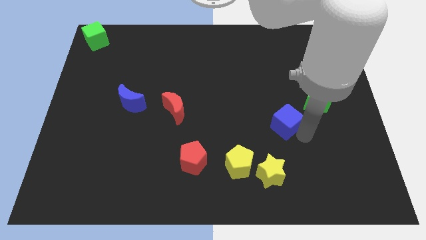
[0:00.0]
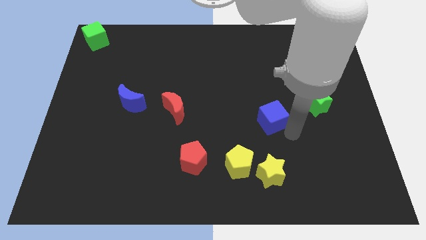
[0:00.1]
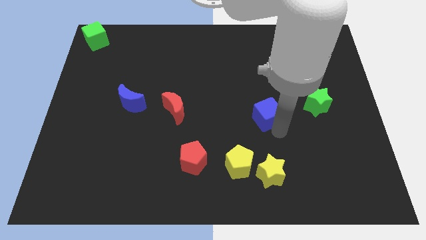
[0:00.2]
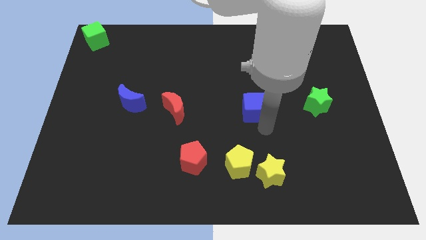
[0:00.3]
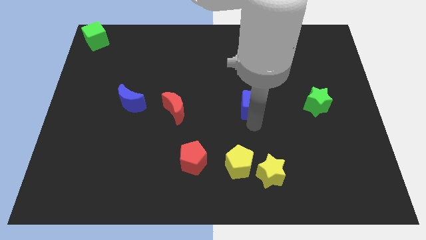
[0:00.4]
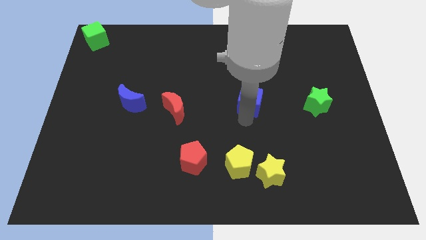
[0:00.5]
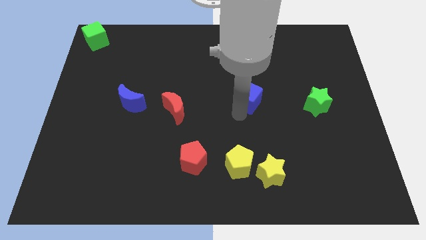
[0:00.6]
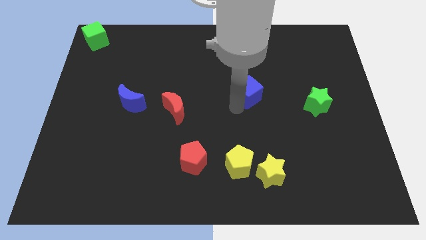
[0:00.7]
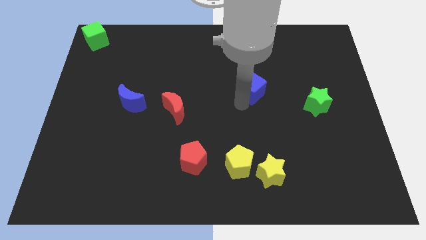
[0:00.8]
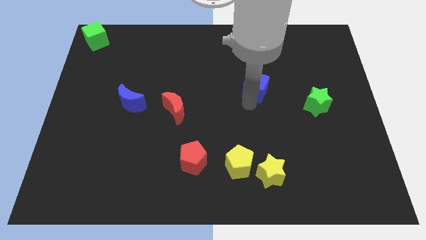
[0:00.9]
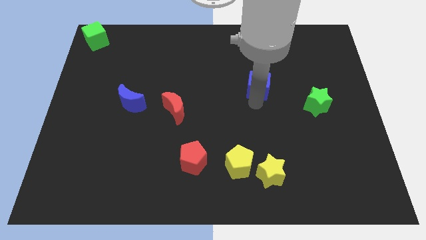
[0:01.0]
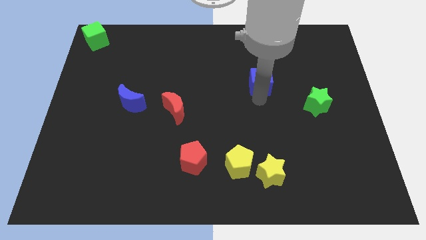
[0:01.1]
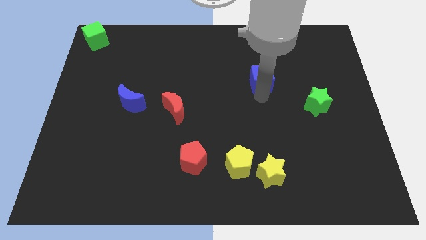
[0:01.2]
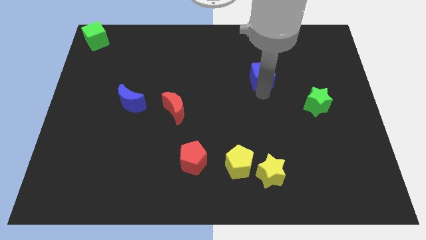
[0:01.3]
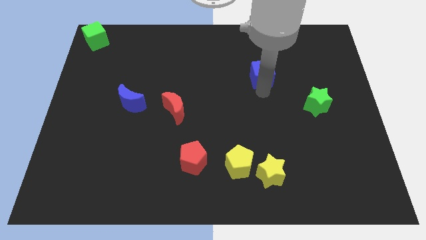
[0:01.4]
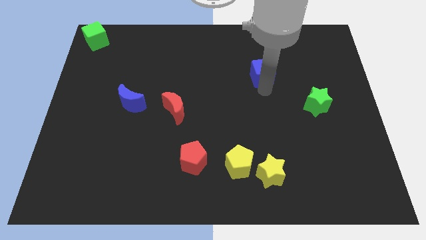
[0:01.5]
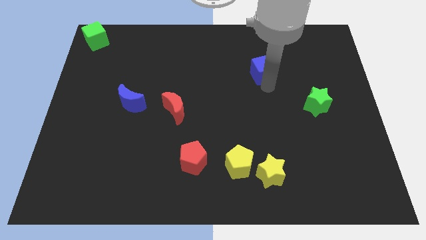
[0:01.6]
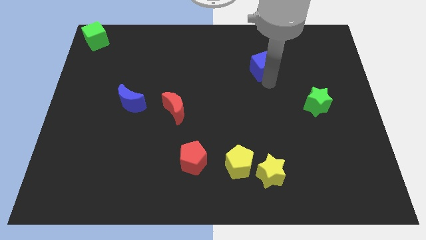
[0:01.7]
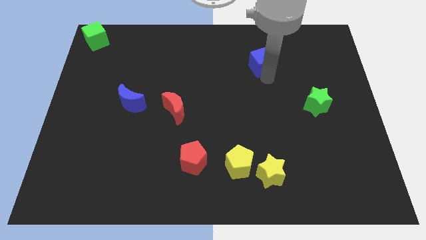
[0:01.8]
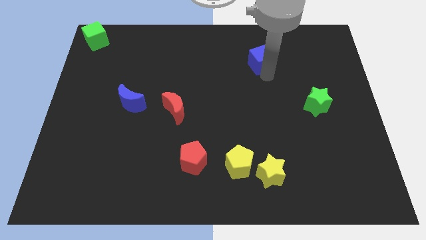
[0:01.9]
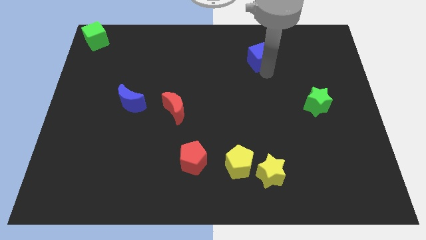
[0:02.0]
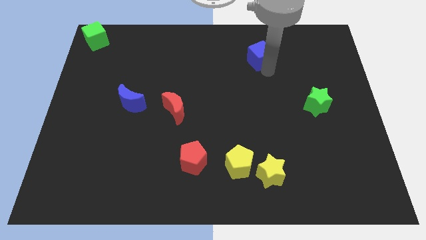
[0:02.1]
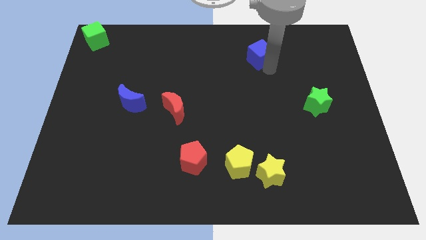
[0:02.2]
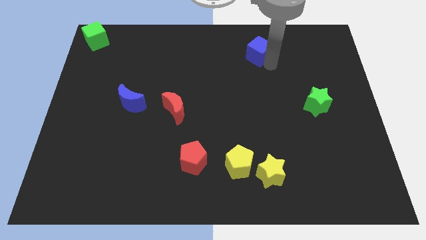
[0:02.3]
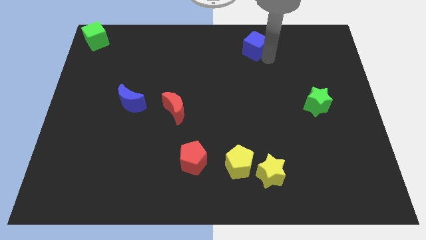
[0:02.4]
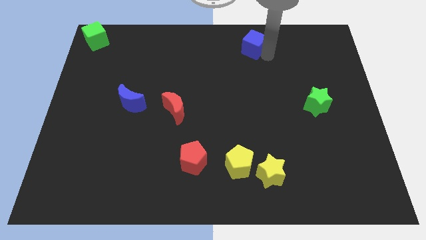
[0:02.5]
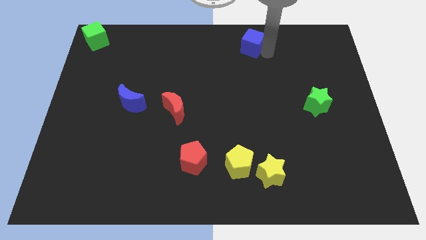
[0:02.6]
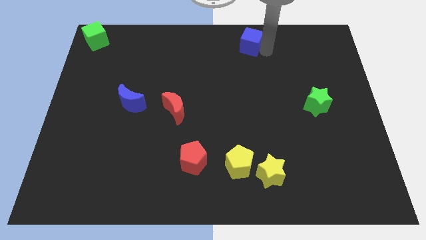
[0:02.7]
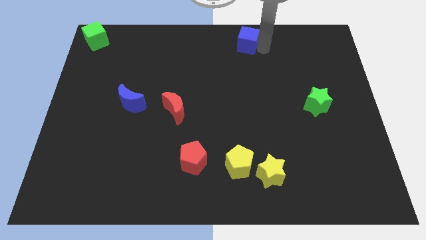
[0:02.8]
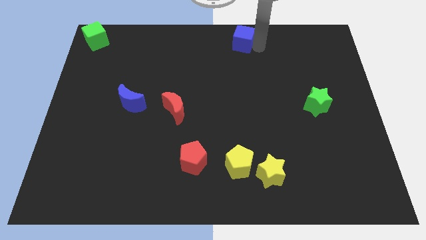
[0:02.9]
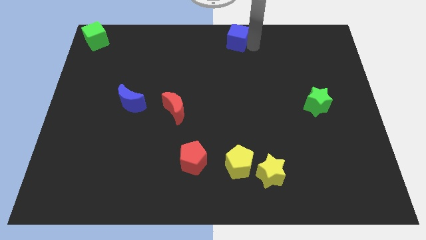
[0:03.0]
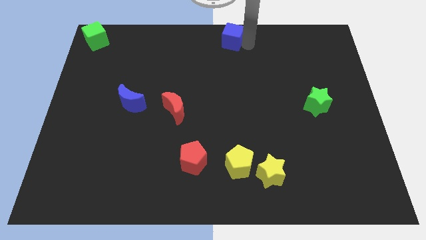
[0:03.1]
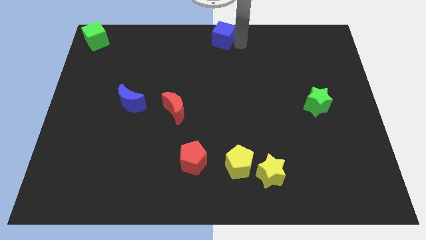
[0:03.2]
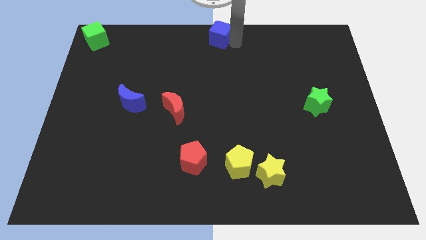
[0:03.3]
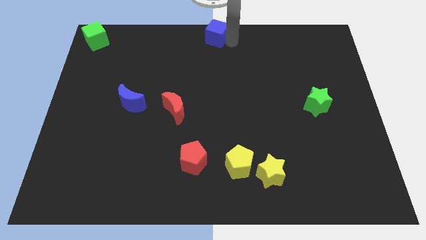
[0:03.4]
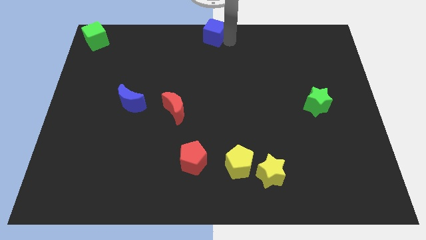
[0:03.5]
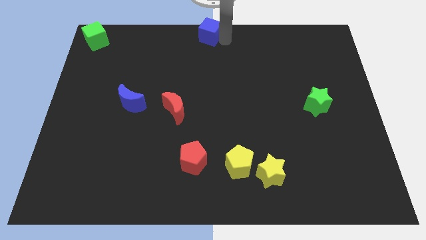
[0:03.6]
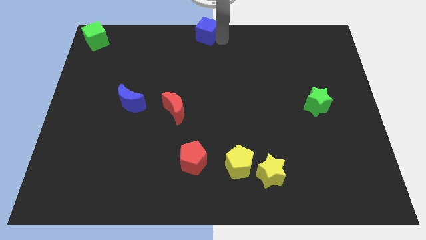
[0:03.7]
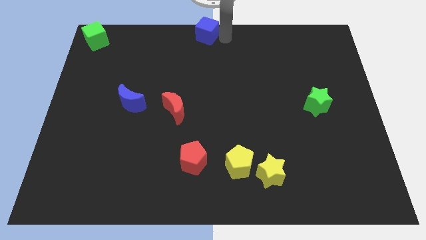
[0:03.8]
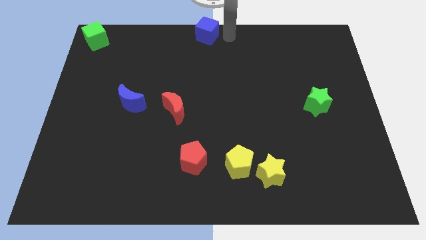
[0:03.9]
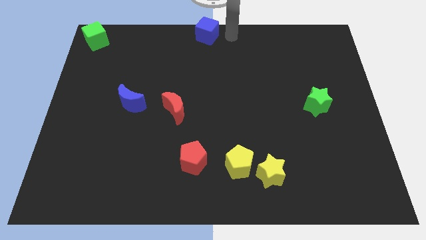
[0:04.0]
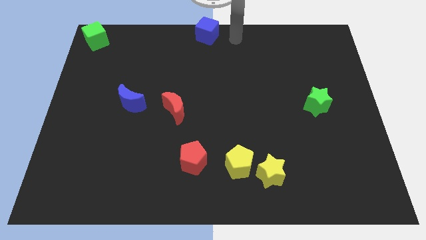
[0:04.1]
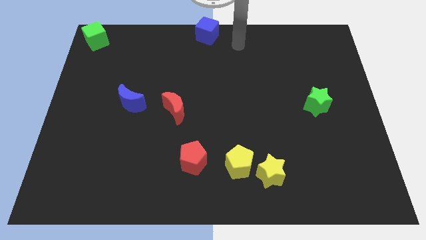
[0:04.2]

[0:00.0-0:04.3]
place the blue cube above the red moon

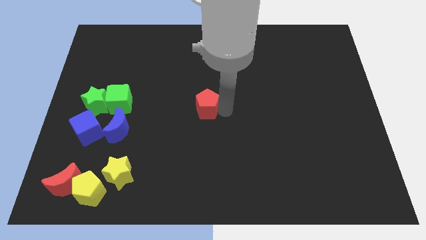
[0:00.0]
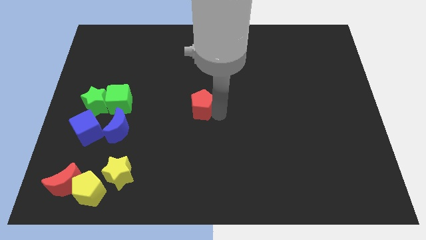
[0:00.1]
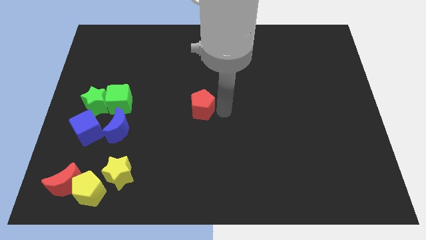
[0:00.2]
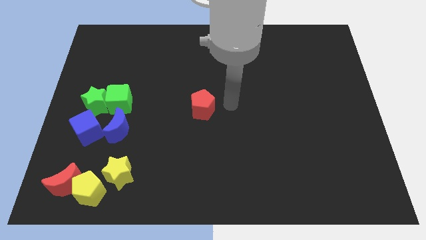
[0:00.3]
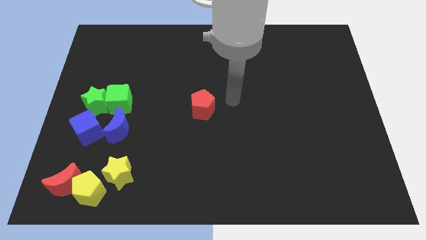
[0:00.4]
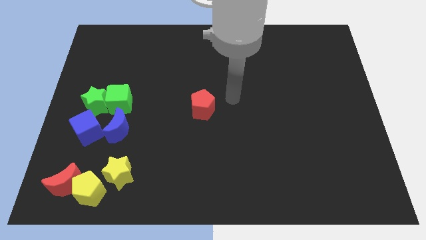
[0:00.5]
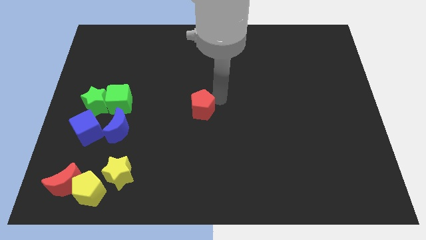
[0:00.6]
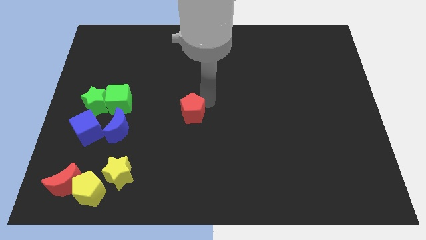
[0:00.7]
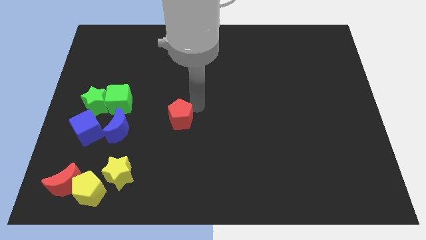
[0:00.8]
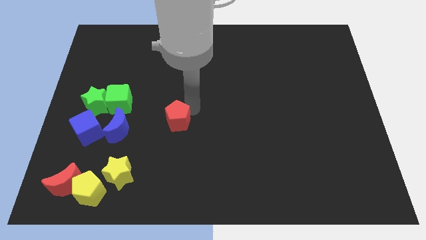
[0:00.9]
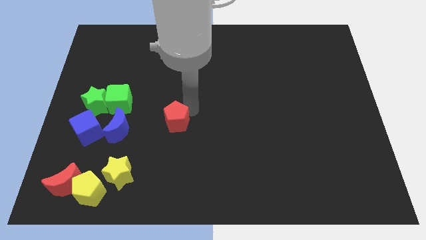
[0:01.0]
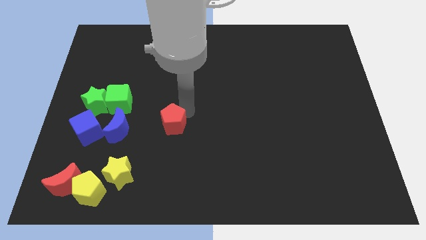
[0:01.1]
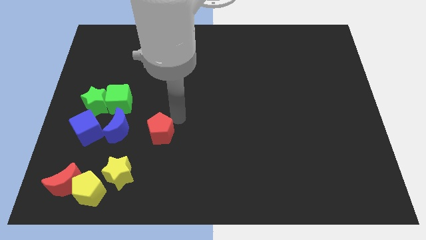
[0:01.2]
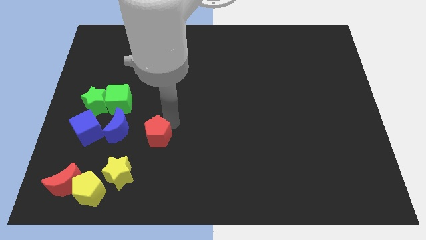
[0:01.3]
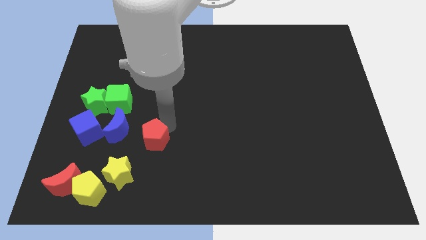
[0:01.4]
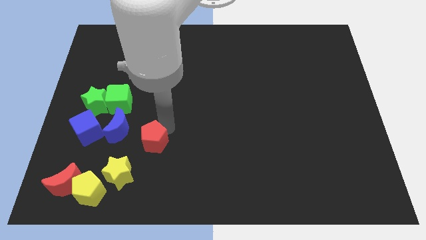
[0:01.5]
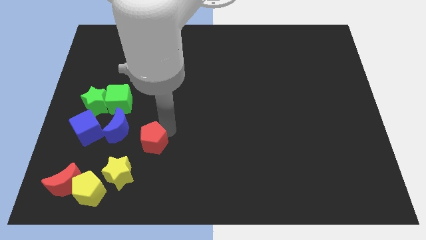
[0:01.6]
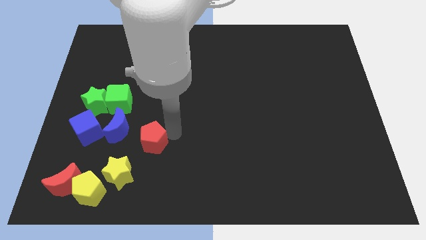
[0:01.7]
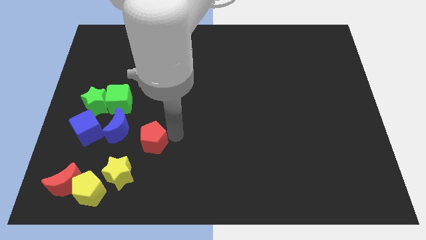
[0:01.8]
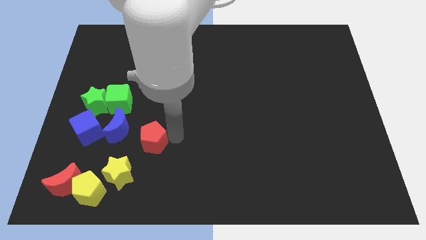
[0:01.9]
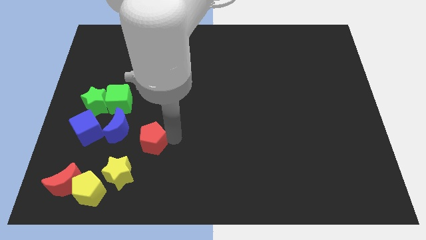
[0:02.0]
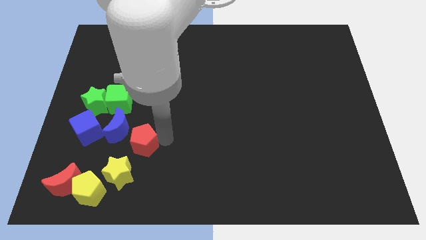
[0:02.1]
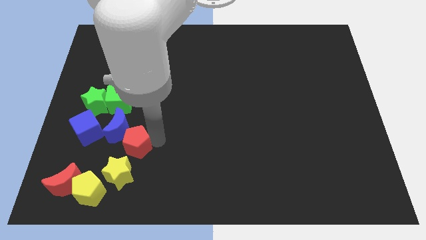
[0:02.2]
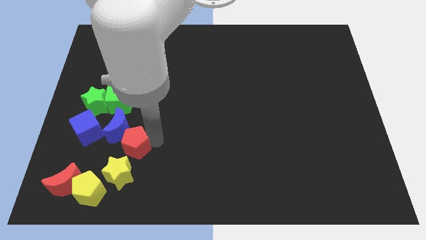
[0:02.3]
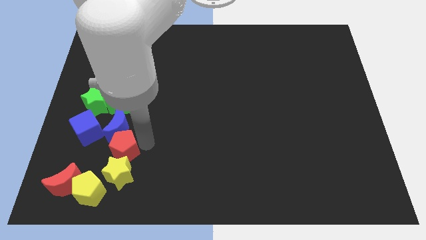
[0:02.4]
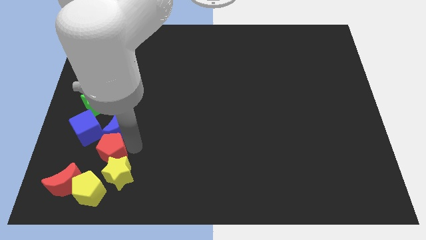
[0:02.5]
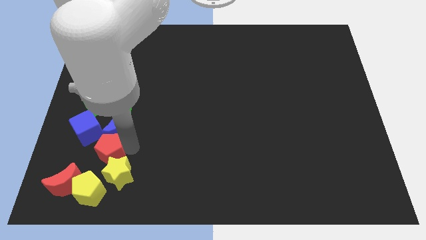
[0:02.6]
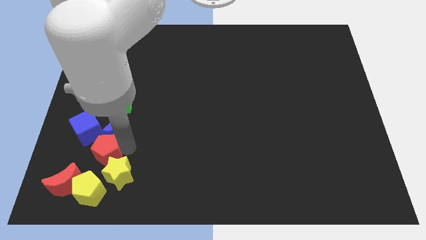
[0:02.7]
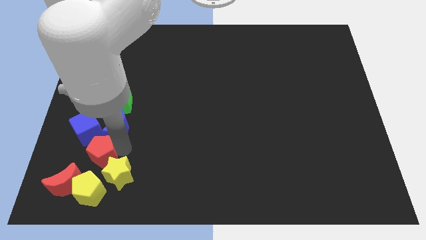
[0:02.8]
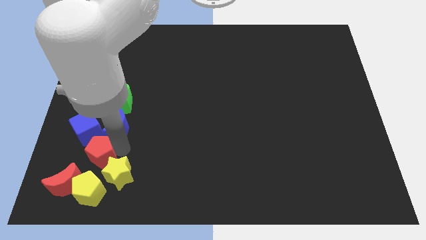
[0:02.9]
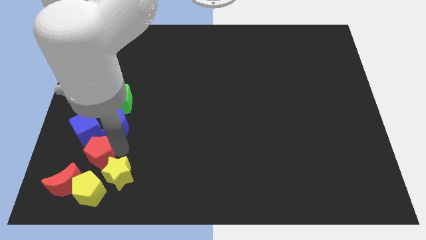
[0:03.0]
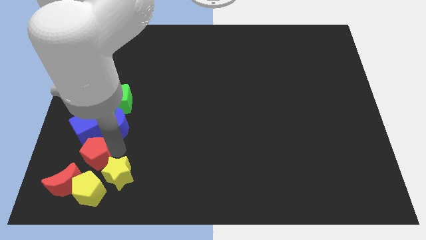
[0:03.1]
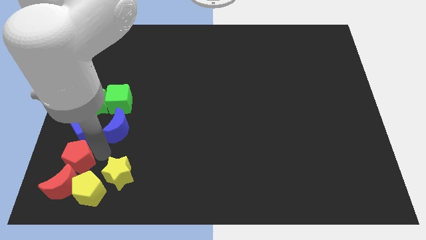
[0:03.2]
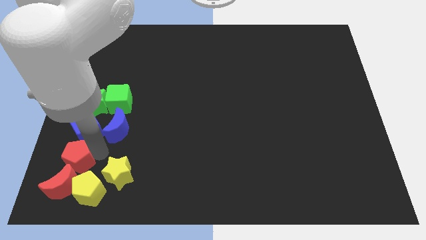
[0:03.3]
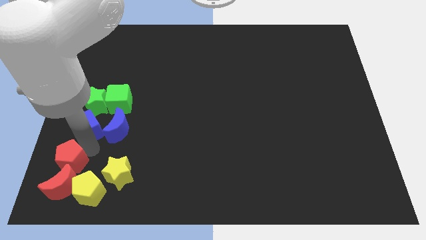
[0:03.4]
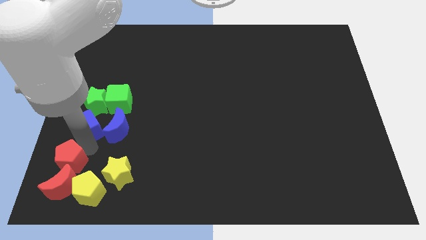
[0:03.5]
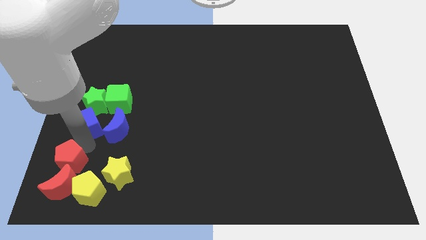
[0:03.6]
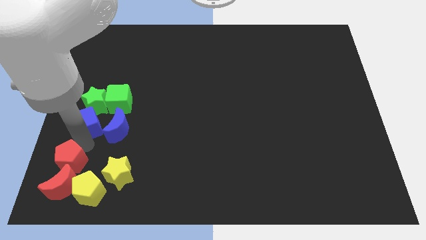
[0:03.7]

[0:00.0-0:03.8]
slide the red pentagon into the top side of the red moon

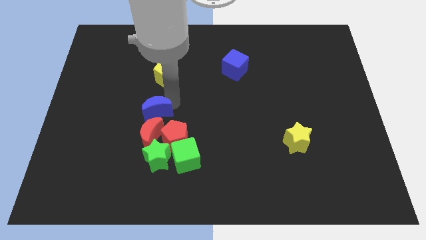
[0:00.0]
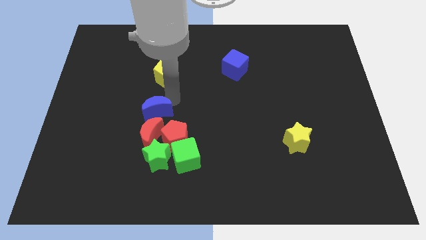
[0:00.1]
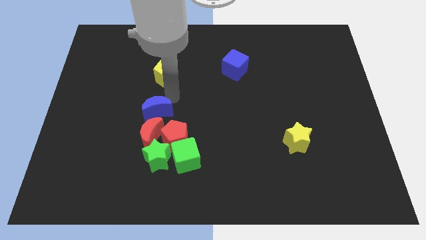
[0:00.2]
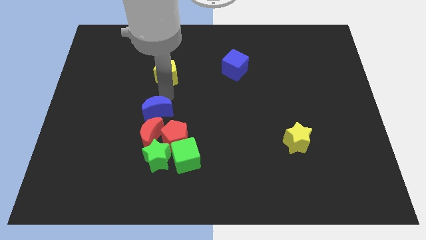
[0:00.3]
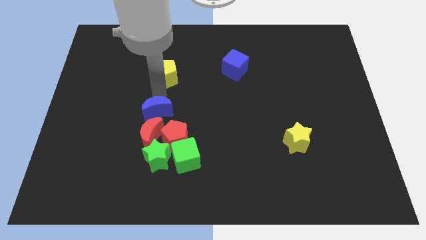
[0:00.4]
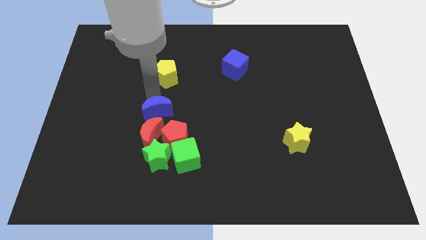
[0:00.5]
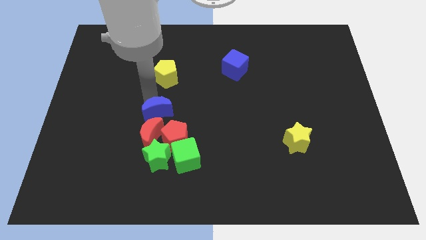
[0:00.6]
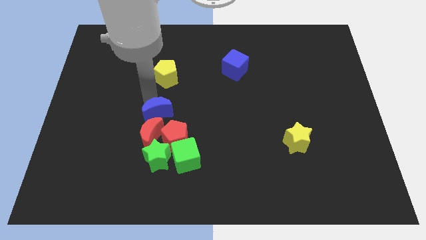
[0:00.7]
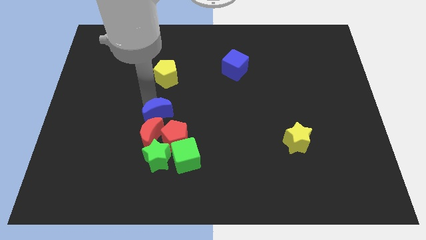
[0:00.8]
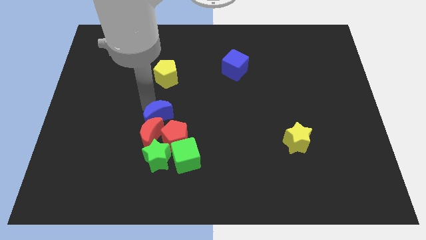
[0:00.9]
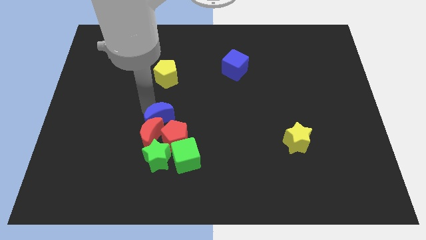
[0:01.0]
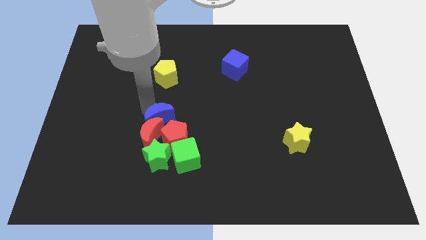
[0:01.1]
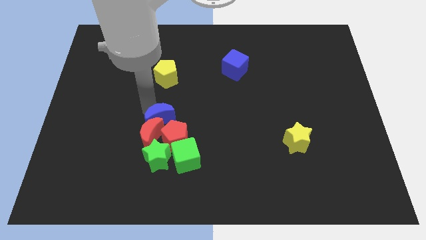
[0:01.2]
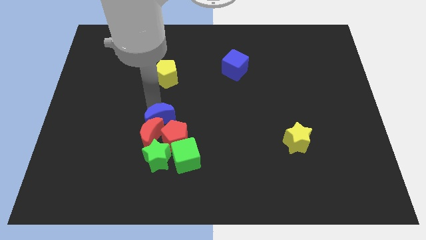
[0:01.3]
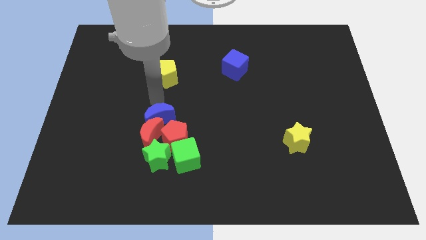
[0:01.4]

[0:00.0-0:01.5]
slide the blue moon to the top of red moon
